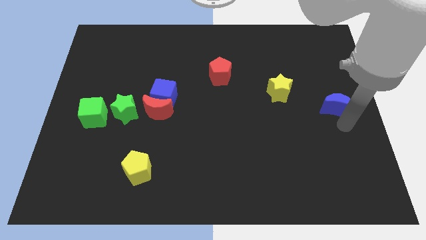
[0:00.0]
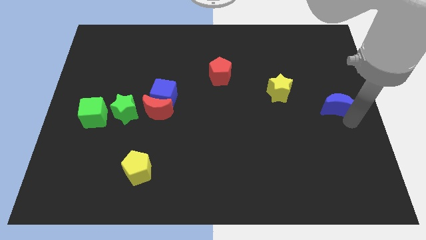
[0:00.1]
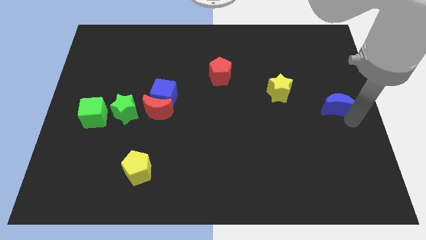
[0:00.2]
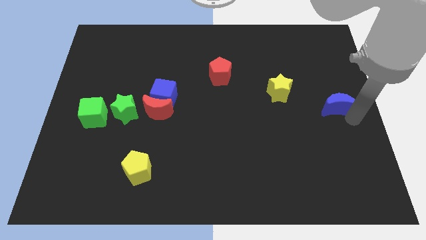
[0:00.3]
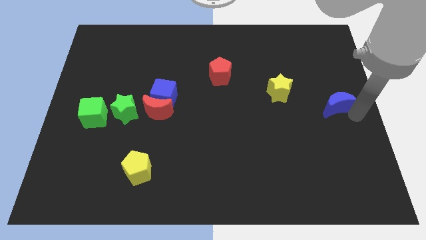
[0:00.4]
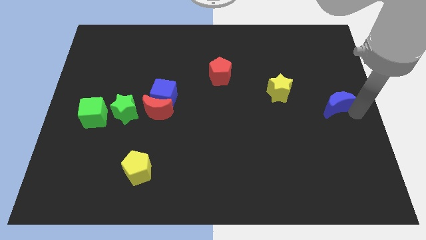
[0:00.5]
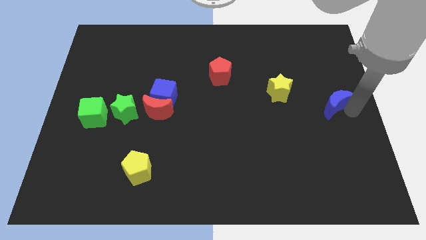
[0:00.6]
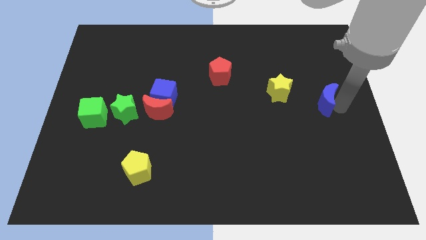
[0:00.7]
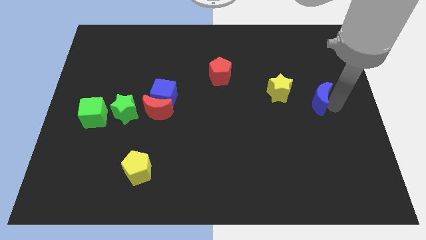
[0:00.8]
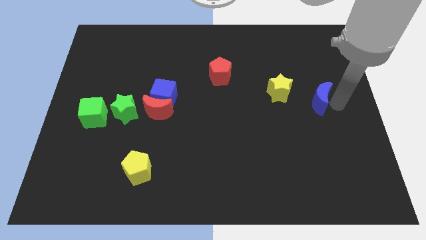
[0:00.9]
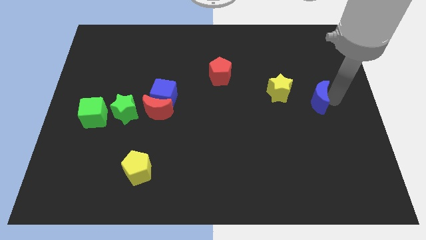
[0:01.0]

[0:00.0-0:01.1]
place the blue moon right to the yellow star

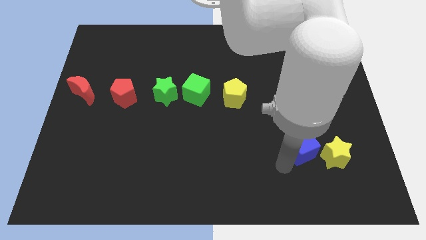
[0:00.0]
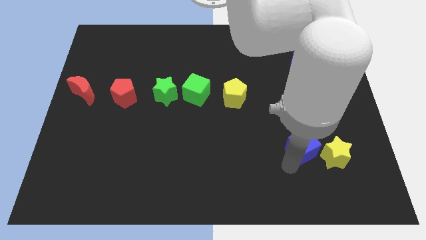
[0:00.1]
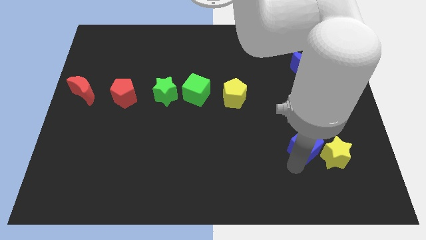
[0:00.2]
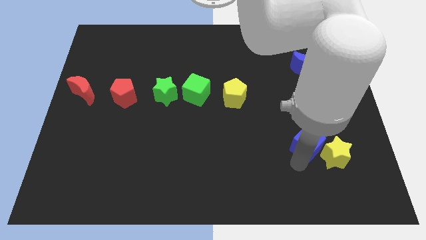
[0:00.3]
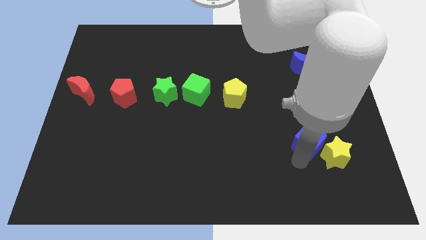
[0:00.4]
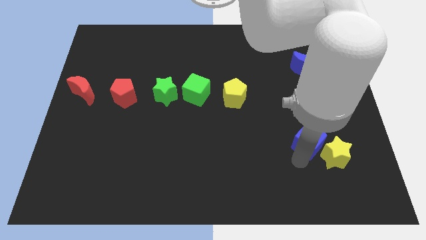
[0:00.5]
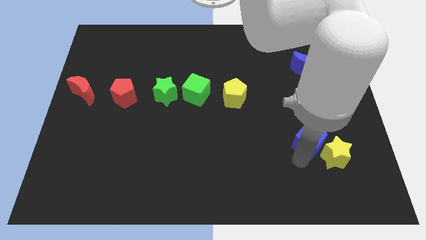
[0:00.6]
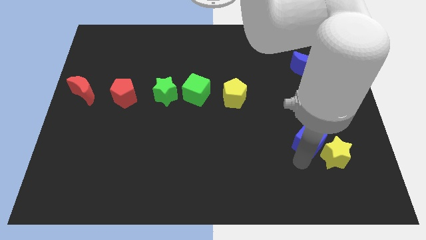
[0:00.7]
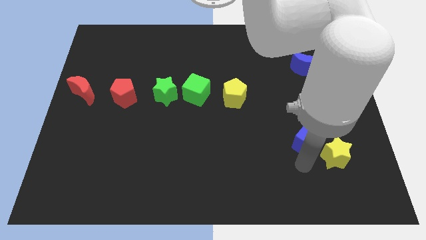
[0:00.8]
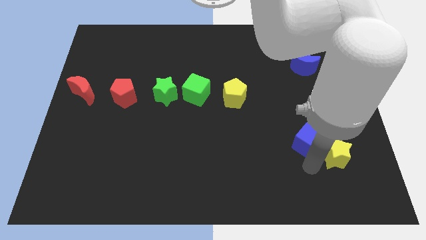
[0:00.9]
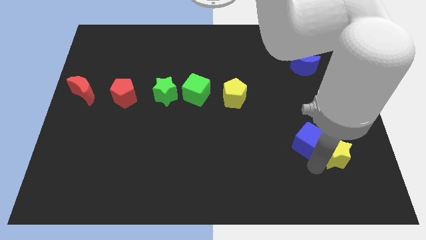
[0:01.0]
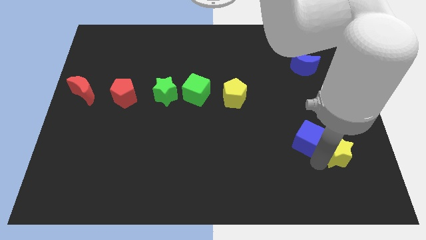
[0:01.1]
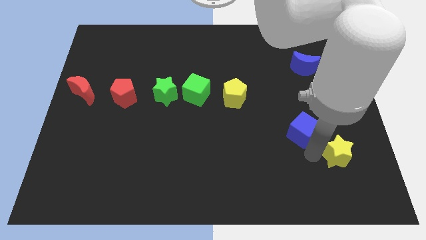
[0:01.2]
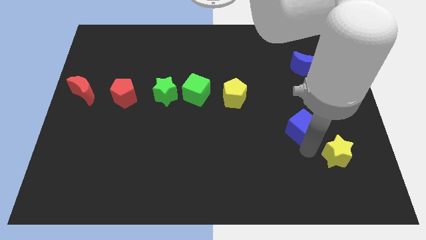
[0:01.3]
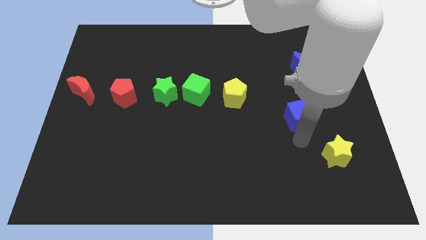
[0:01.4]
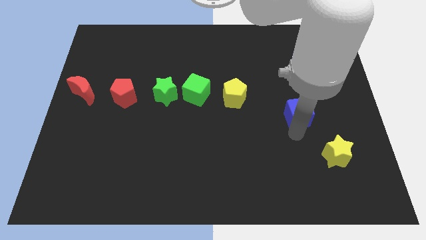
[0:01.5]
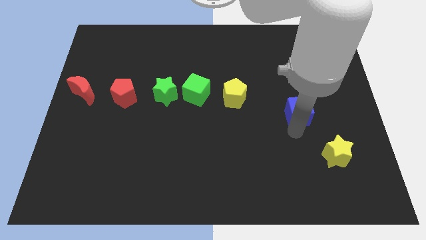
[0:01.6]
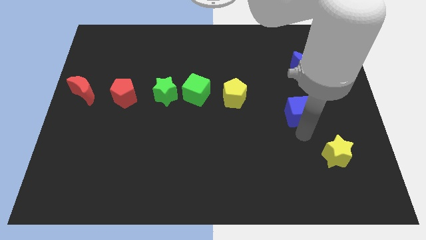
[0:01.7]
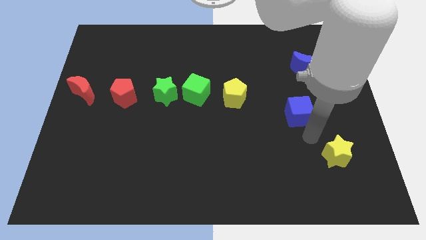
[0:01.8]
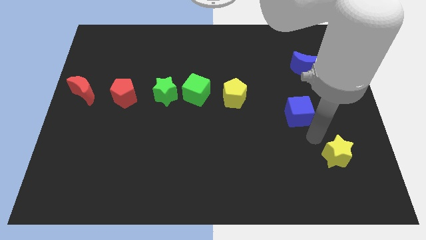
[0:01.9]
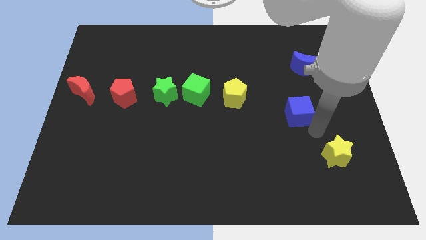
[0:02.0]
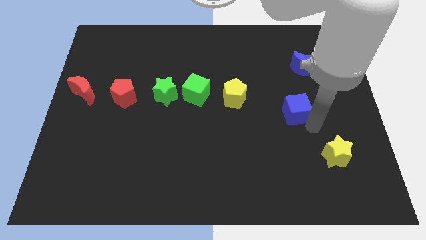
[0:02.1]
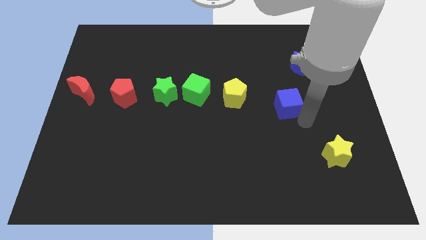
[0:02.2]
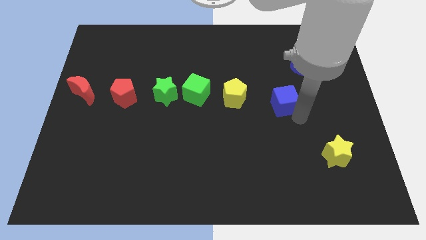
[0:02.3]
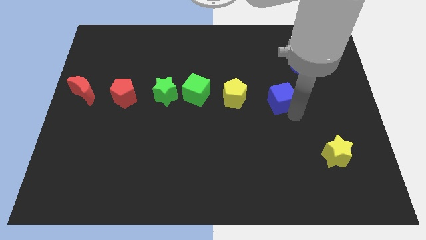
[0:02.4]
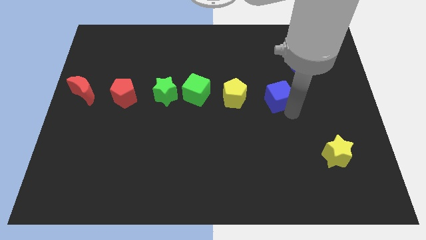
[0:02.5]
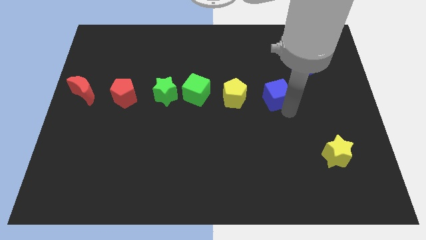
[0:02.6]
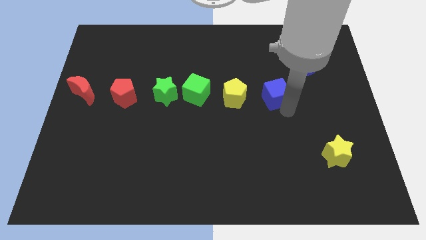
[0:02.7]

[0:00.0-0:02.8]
move the blue cube to the right of the yellow pentagon

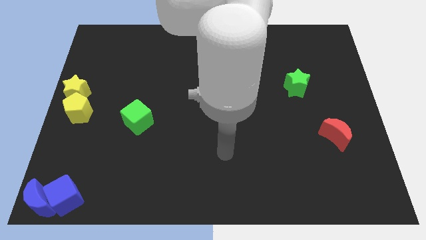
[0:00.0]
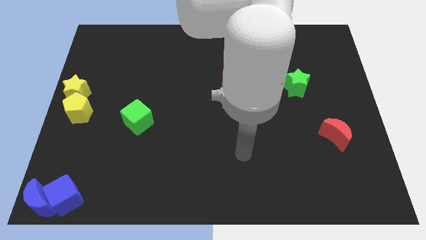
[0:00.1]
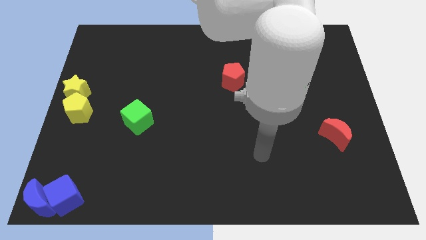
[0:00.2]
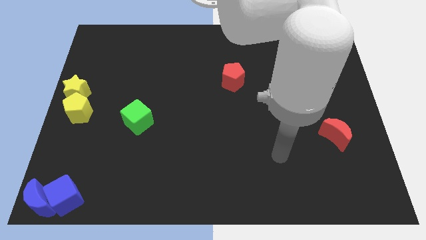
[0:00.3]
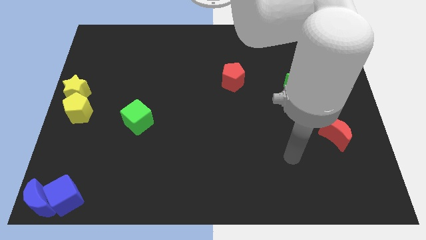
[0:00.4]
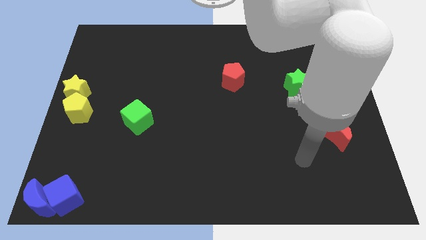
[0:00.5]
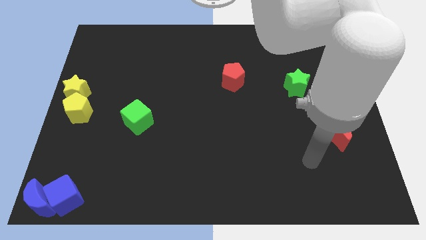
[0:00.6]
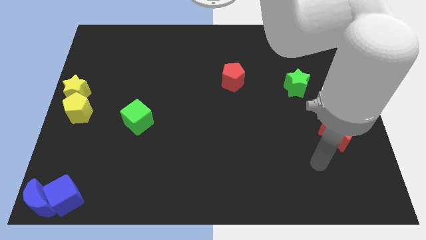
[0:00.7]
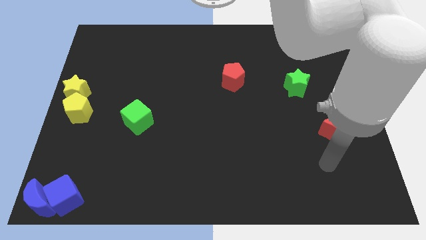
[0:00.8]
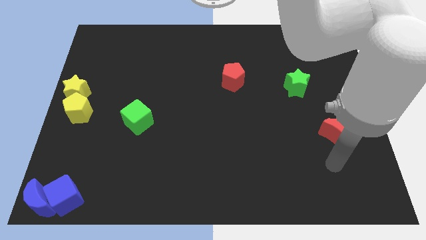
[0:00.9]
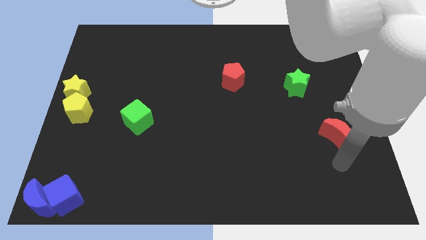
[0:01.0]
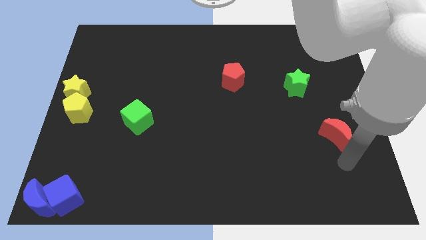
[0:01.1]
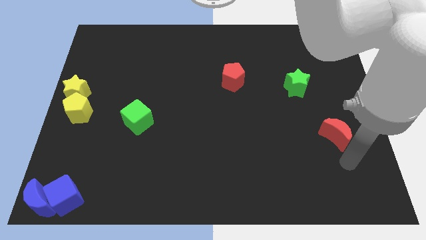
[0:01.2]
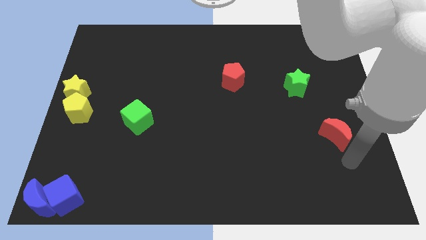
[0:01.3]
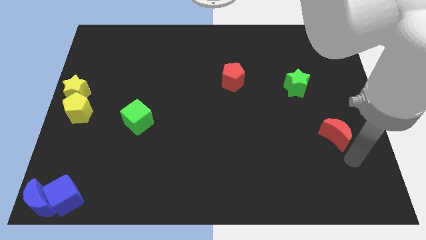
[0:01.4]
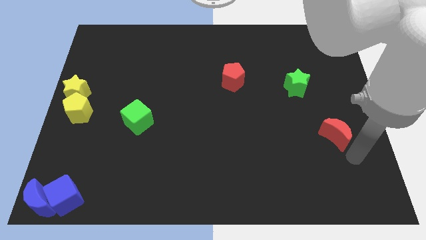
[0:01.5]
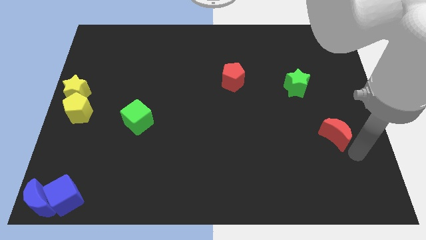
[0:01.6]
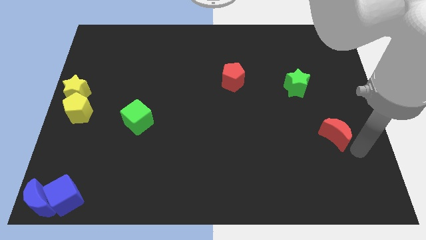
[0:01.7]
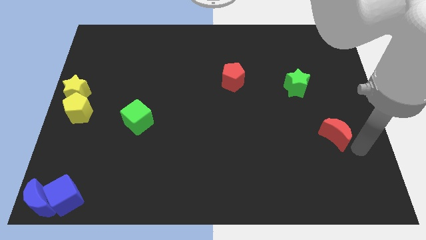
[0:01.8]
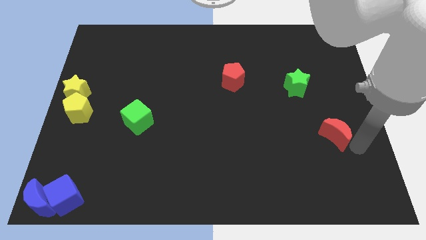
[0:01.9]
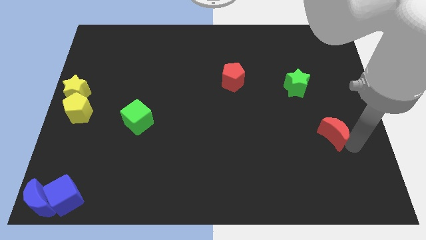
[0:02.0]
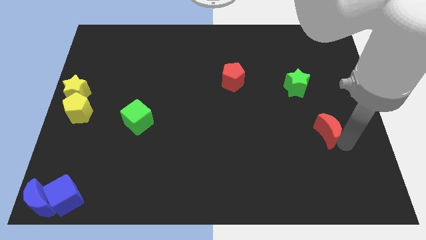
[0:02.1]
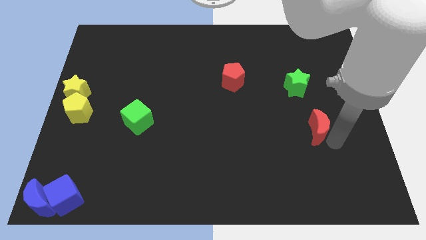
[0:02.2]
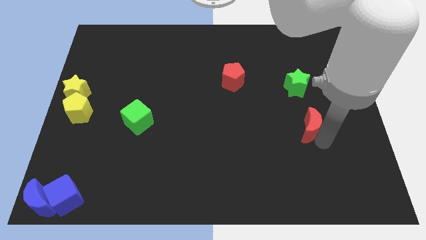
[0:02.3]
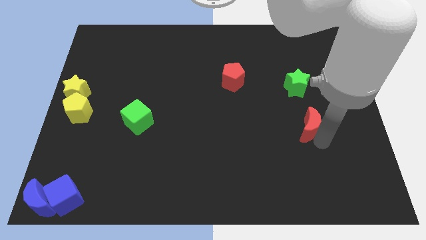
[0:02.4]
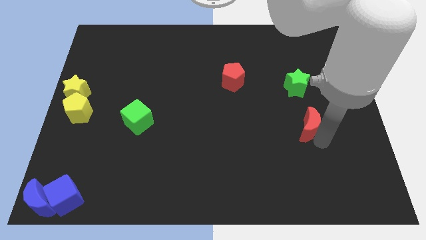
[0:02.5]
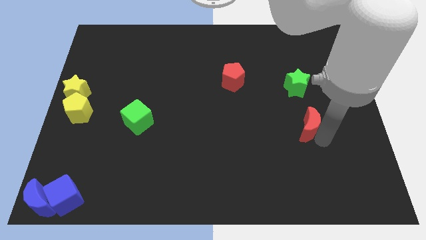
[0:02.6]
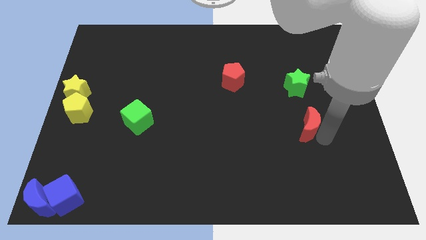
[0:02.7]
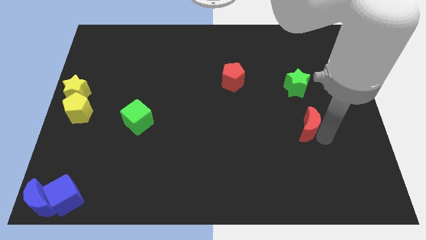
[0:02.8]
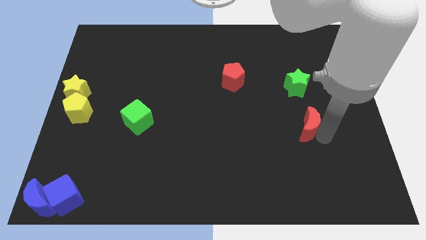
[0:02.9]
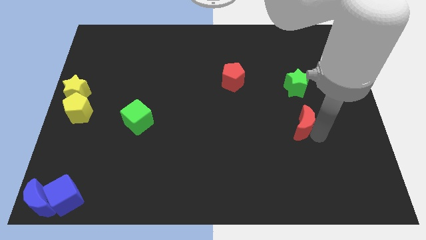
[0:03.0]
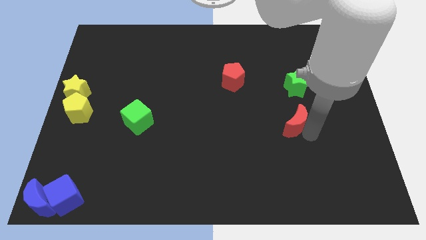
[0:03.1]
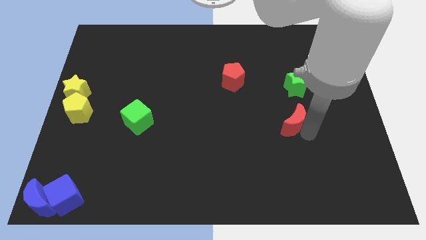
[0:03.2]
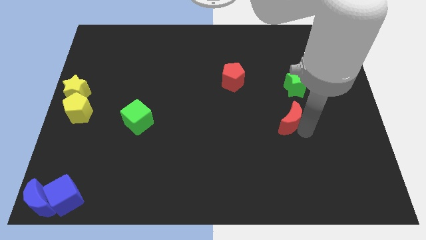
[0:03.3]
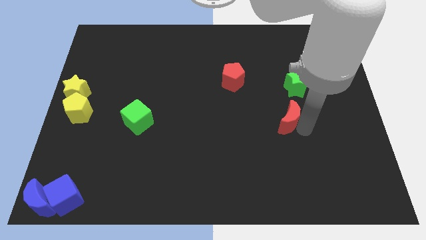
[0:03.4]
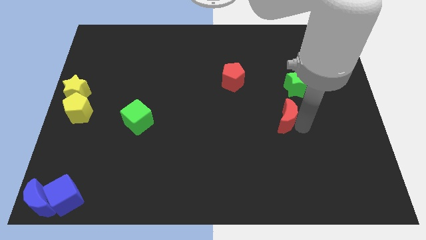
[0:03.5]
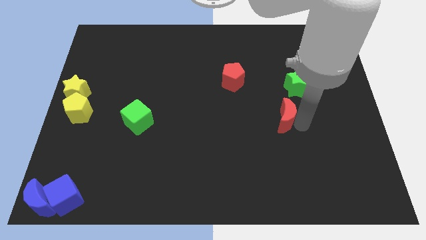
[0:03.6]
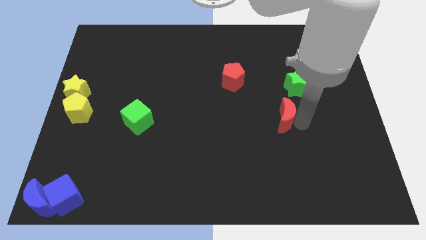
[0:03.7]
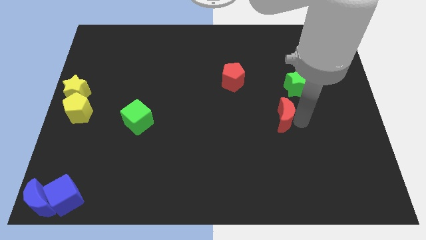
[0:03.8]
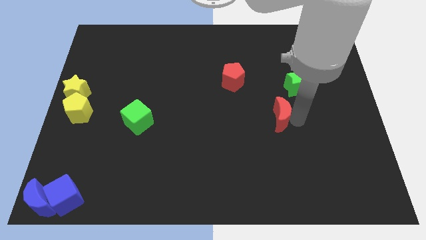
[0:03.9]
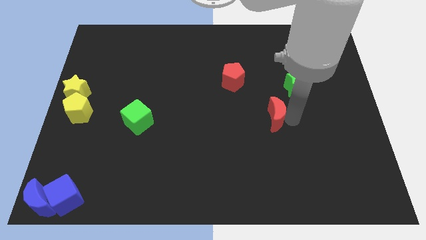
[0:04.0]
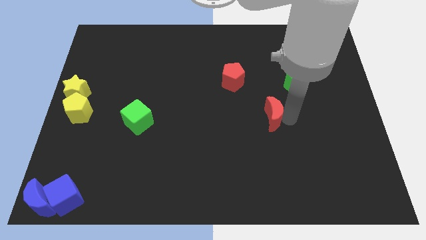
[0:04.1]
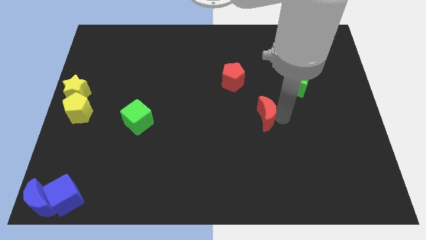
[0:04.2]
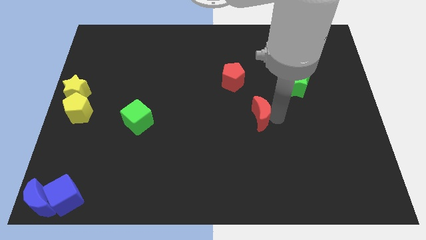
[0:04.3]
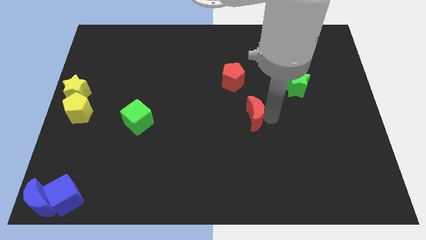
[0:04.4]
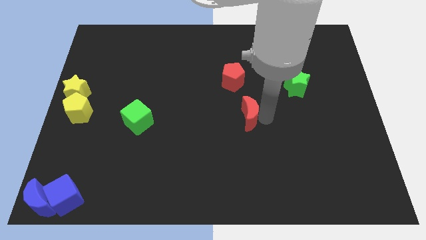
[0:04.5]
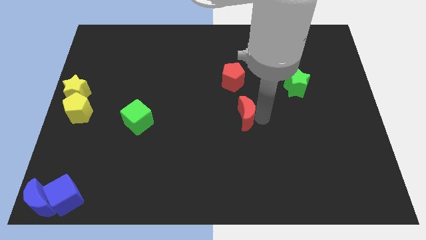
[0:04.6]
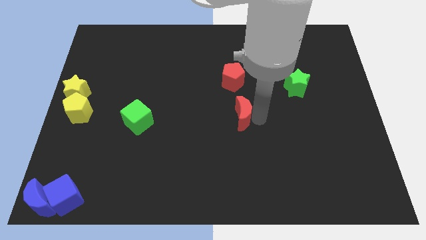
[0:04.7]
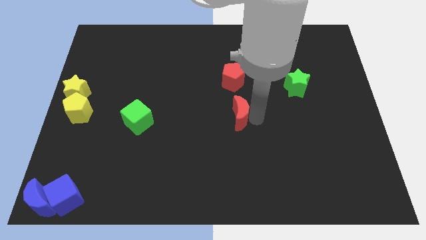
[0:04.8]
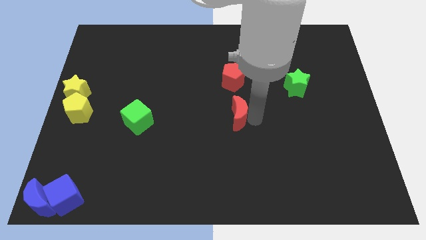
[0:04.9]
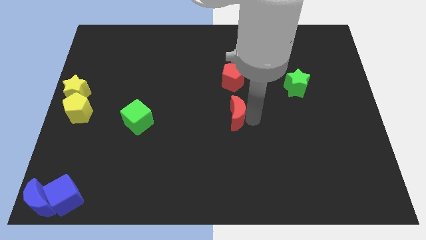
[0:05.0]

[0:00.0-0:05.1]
move the red moon towards the center
